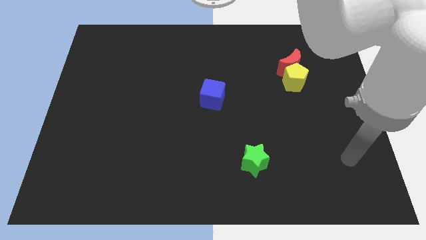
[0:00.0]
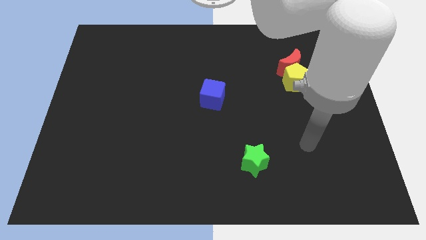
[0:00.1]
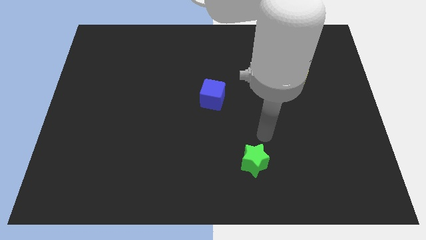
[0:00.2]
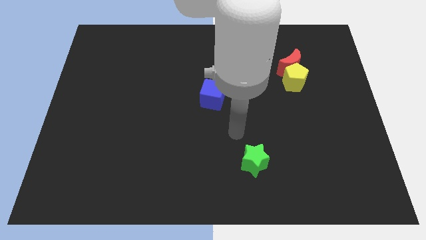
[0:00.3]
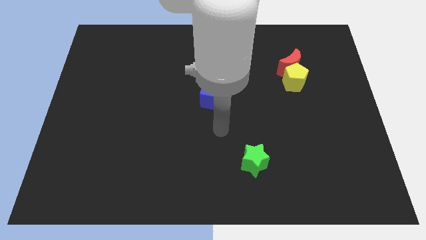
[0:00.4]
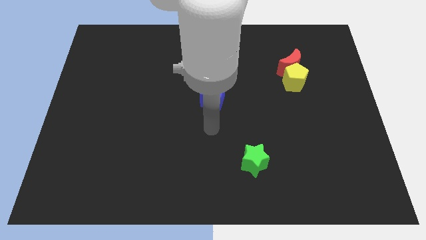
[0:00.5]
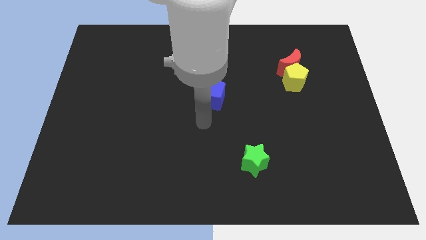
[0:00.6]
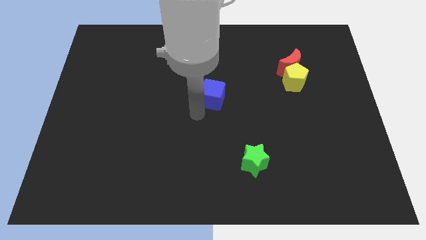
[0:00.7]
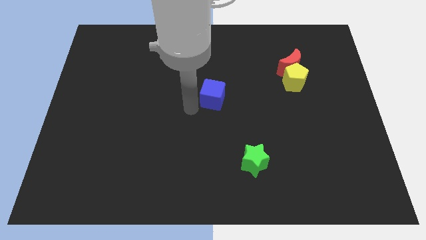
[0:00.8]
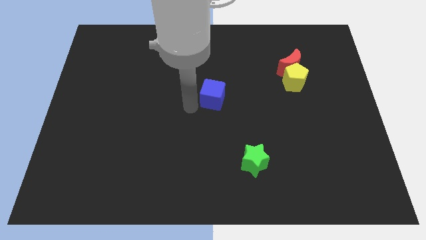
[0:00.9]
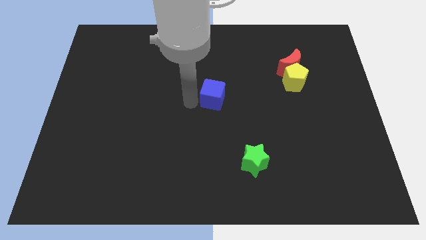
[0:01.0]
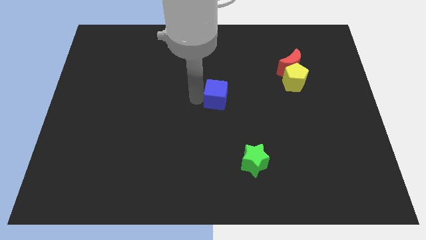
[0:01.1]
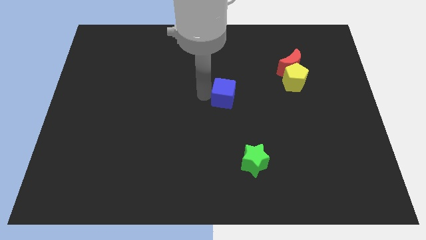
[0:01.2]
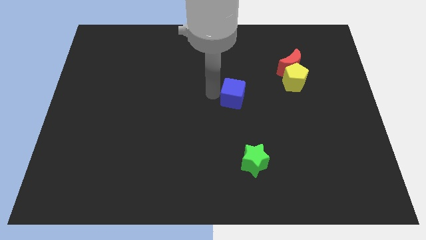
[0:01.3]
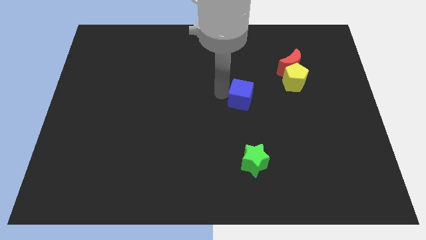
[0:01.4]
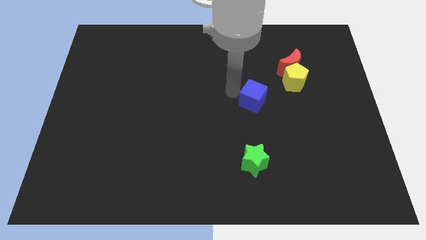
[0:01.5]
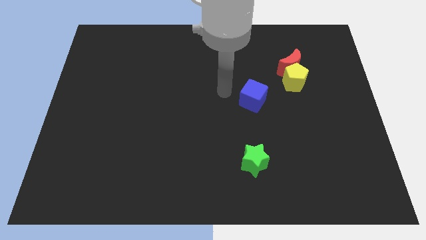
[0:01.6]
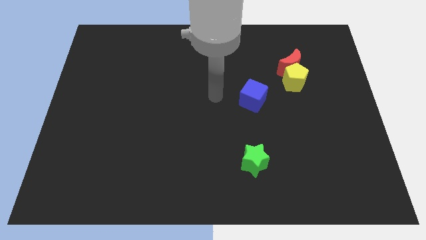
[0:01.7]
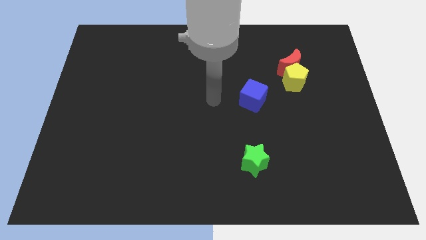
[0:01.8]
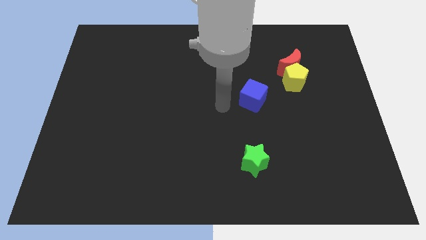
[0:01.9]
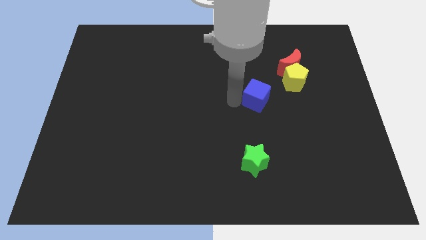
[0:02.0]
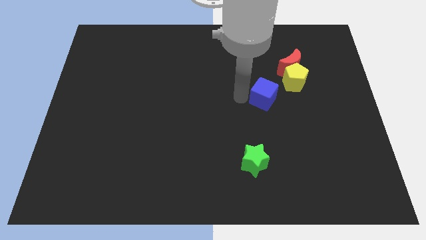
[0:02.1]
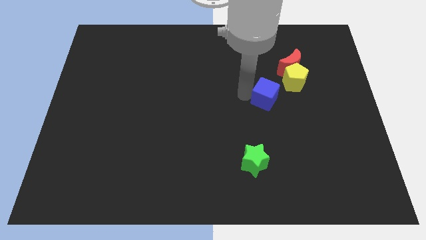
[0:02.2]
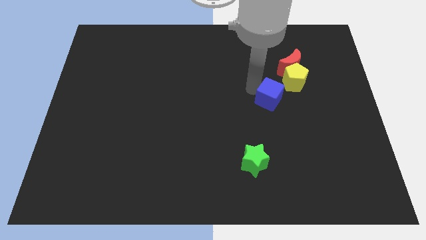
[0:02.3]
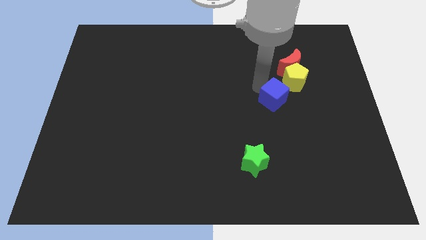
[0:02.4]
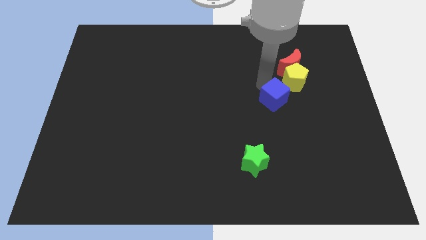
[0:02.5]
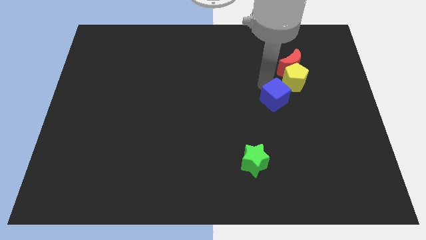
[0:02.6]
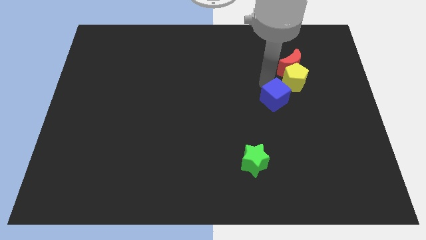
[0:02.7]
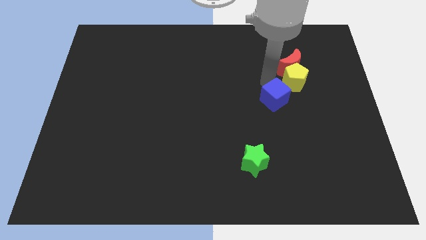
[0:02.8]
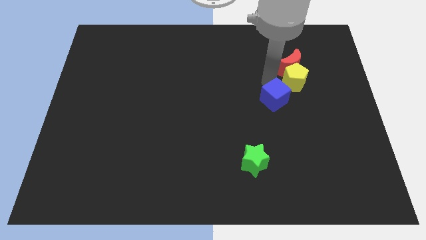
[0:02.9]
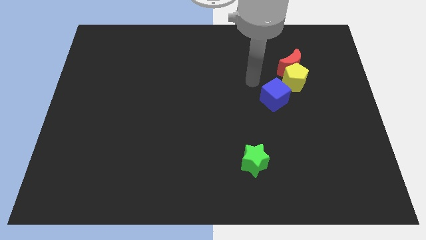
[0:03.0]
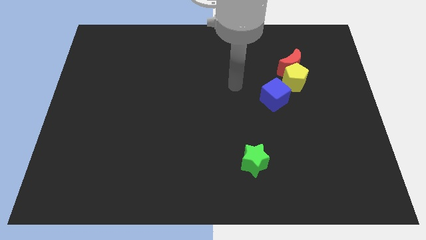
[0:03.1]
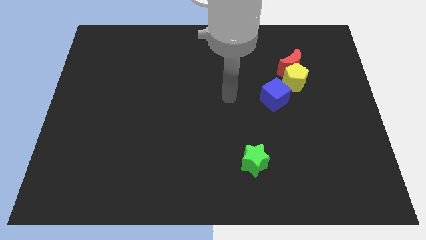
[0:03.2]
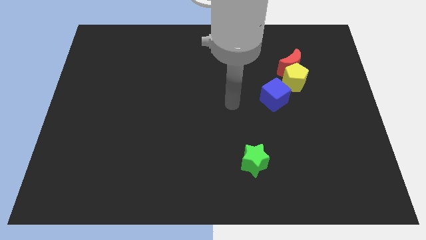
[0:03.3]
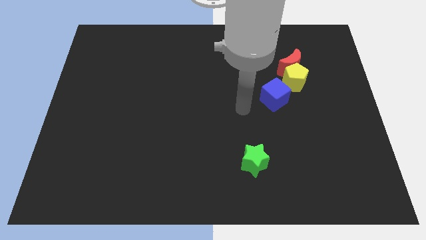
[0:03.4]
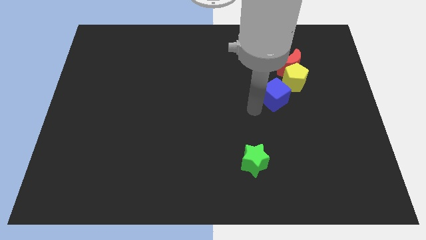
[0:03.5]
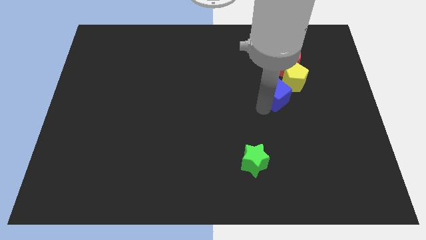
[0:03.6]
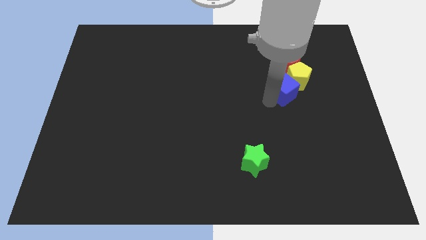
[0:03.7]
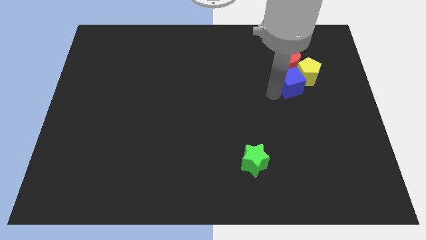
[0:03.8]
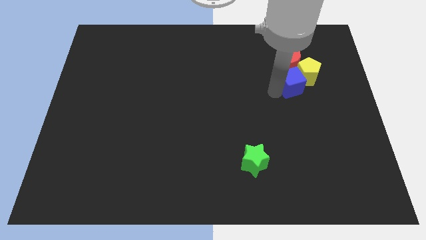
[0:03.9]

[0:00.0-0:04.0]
put the blue cube to the yellow pentagon

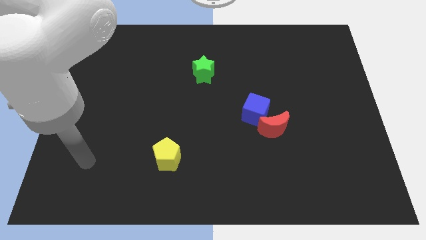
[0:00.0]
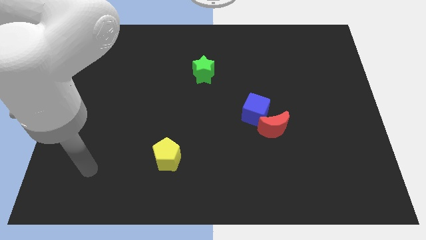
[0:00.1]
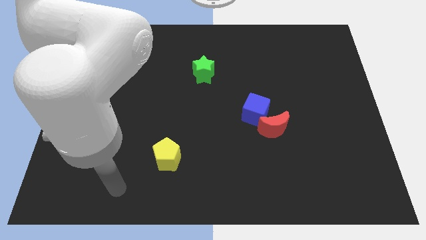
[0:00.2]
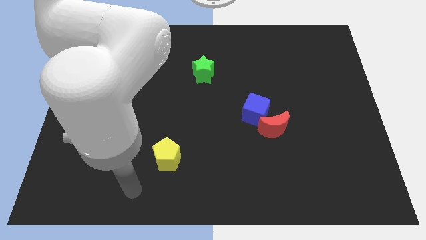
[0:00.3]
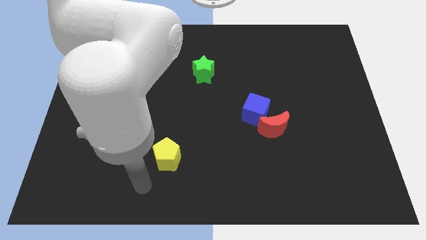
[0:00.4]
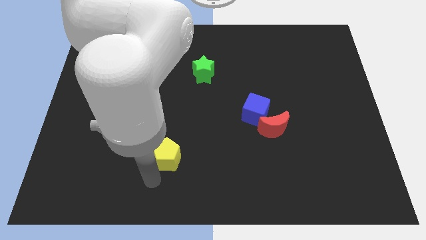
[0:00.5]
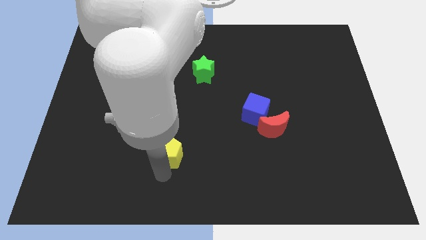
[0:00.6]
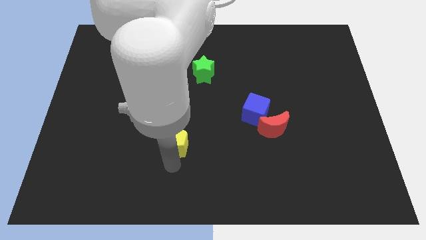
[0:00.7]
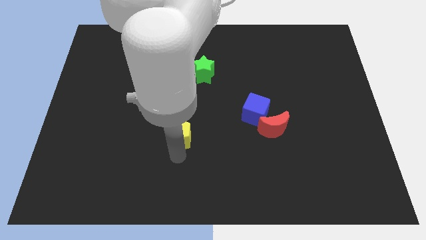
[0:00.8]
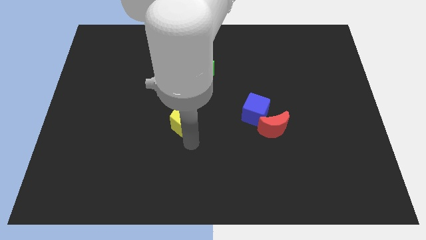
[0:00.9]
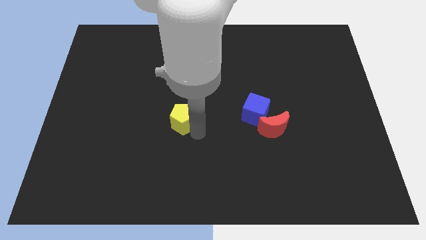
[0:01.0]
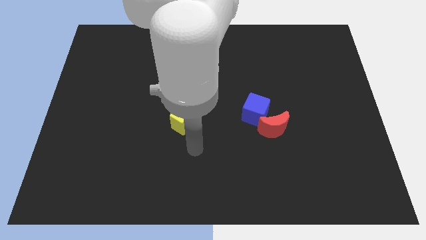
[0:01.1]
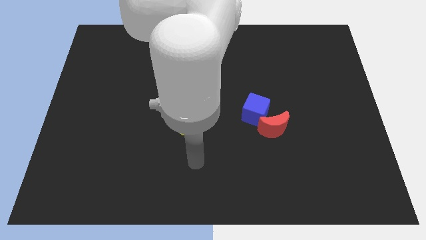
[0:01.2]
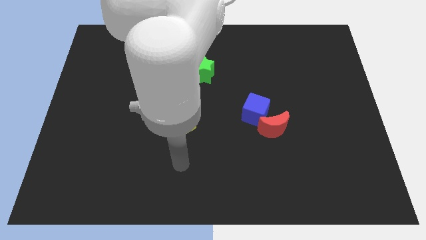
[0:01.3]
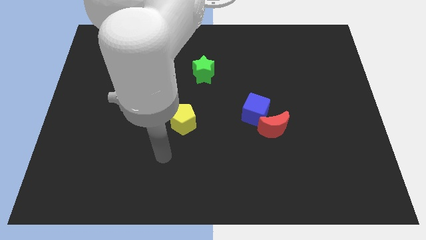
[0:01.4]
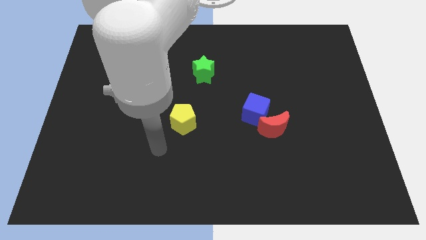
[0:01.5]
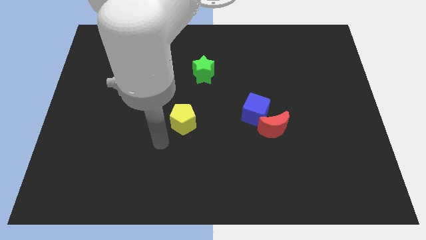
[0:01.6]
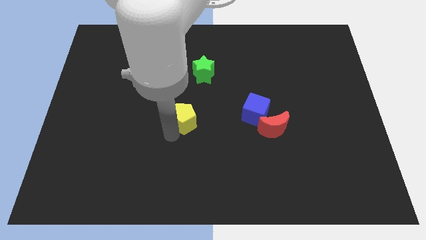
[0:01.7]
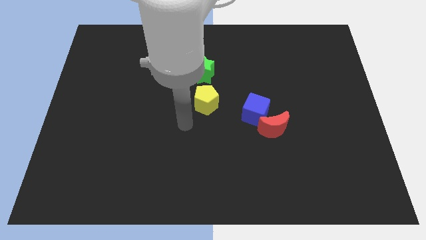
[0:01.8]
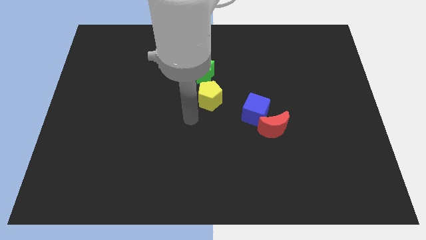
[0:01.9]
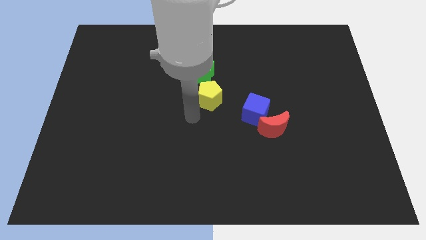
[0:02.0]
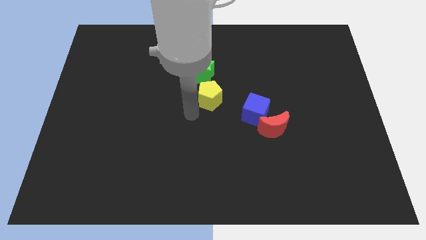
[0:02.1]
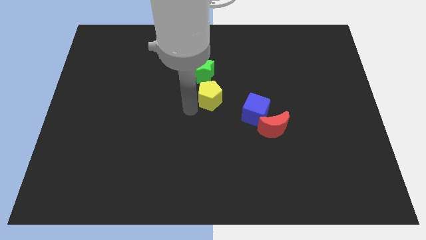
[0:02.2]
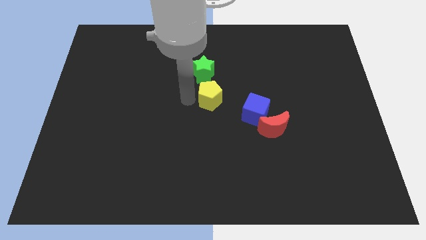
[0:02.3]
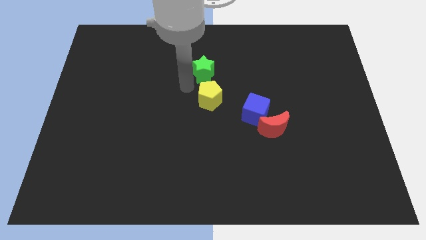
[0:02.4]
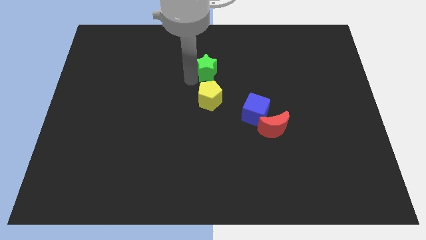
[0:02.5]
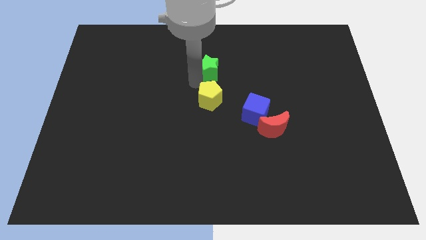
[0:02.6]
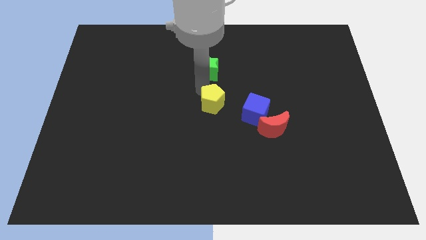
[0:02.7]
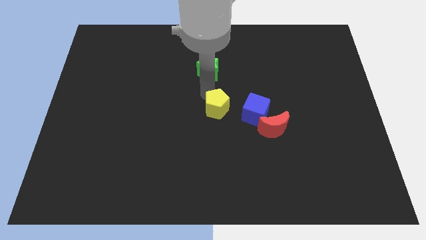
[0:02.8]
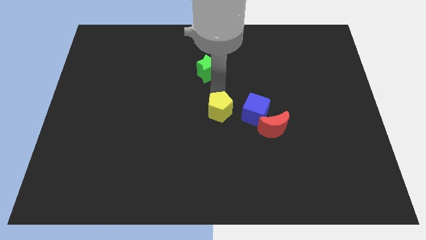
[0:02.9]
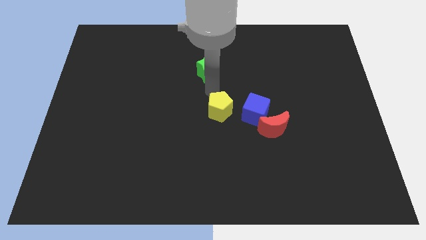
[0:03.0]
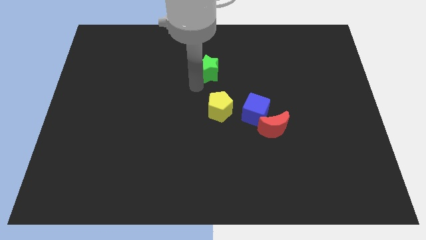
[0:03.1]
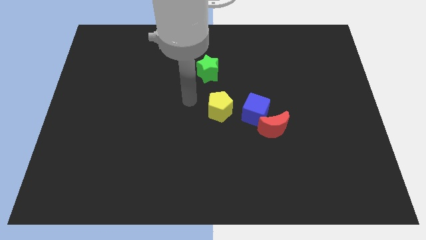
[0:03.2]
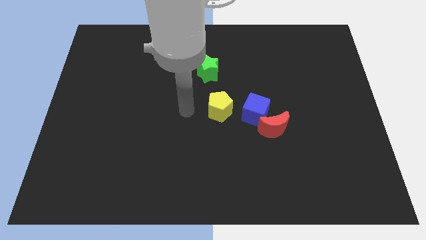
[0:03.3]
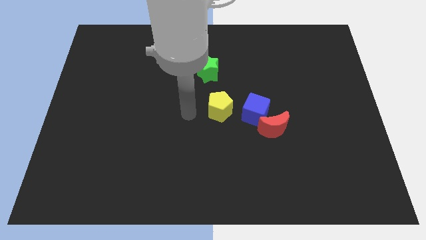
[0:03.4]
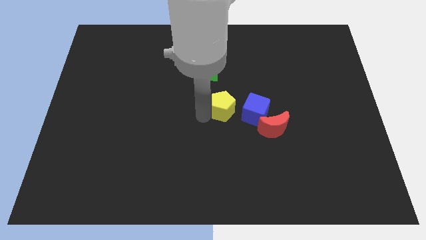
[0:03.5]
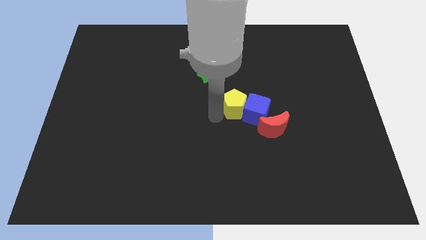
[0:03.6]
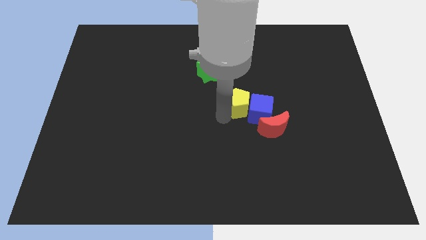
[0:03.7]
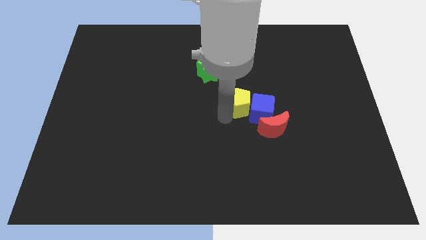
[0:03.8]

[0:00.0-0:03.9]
move the pentagon to the blue cube

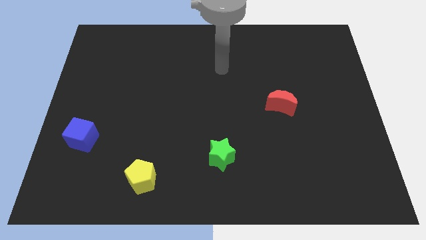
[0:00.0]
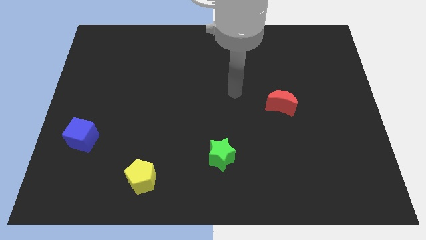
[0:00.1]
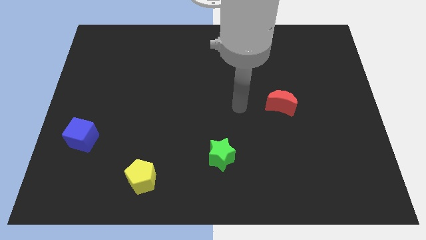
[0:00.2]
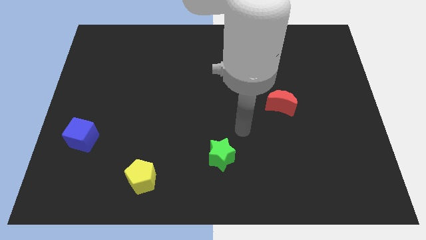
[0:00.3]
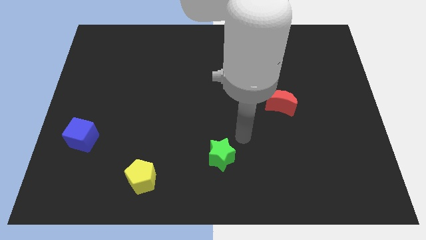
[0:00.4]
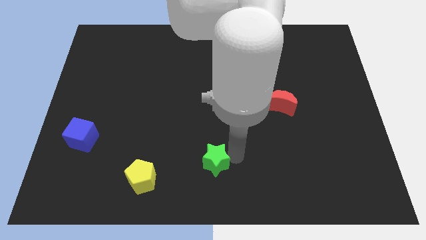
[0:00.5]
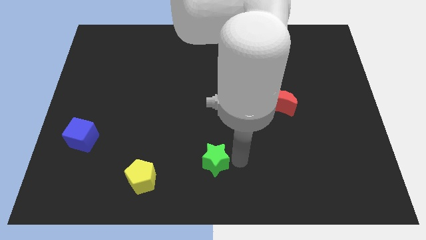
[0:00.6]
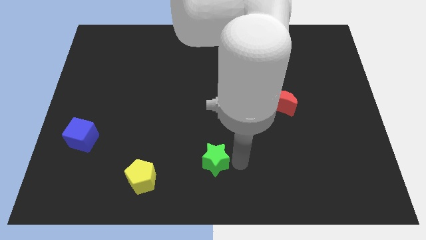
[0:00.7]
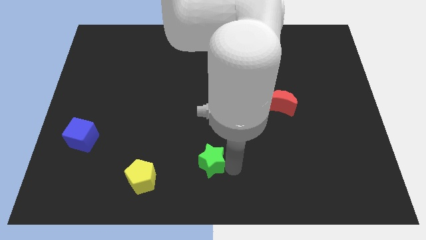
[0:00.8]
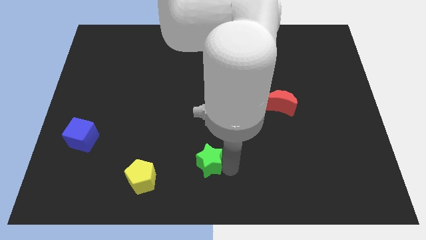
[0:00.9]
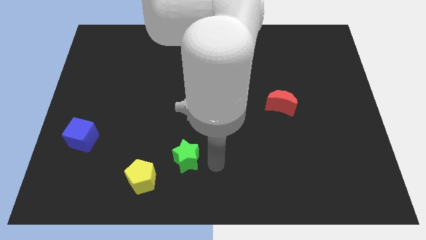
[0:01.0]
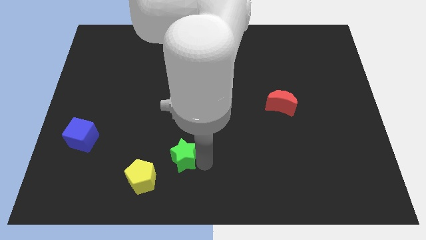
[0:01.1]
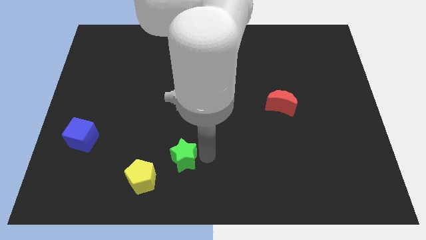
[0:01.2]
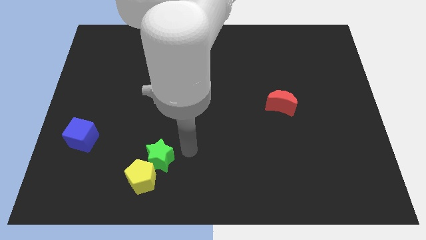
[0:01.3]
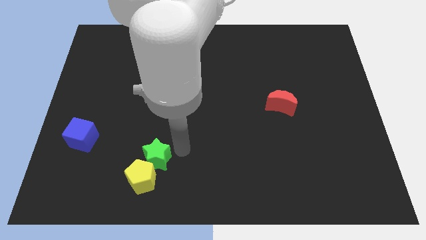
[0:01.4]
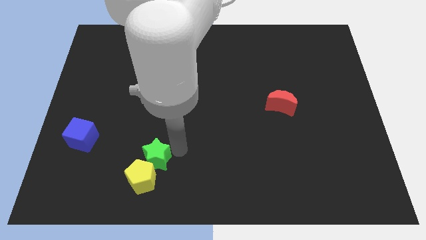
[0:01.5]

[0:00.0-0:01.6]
put the green block towards the pentagon
